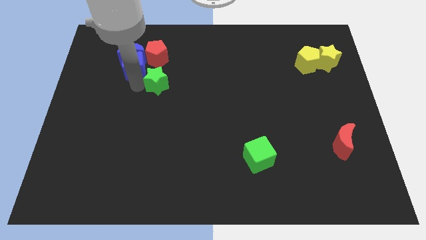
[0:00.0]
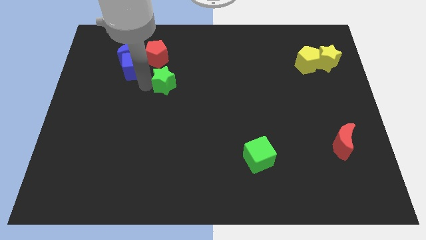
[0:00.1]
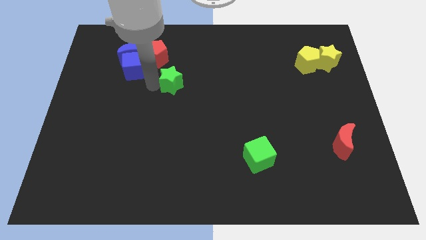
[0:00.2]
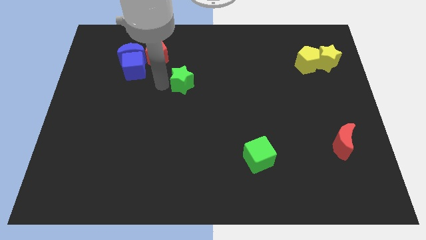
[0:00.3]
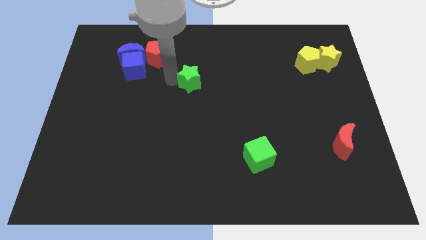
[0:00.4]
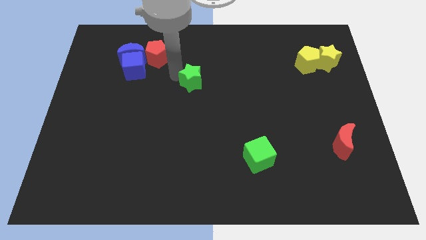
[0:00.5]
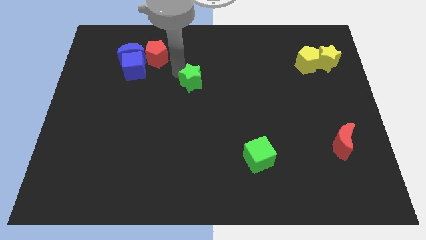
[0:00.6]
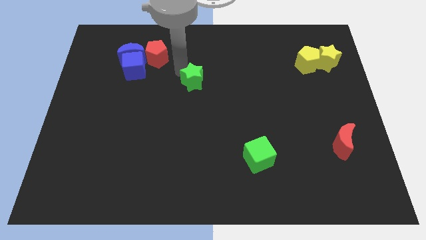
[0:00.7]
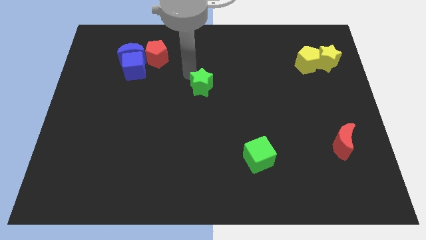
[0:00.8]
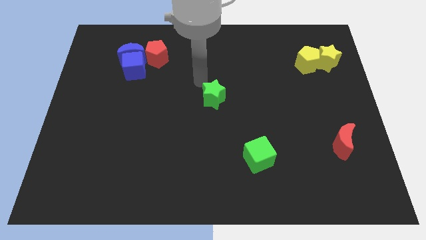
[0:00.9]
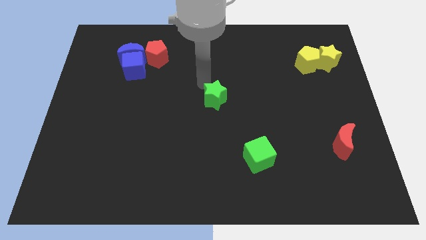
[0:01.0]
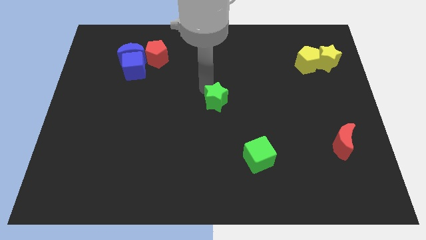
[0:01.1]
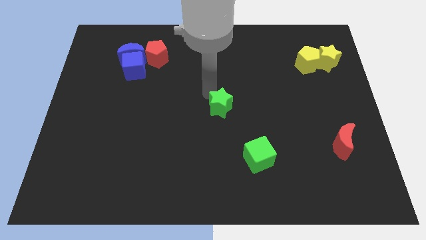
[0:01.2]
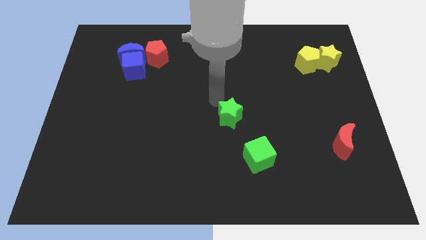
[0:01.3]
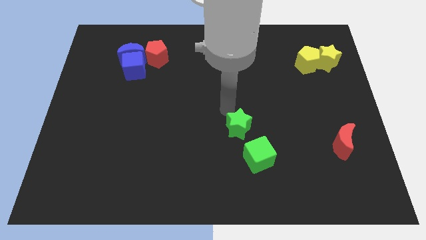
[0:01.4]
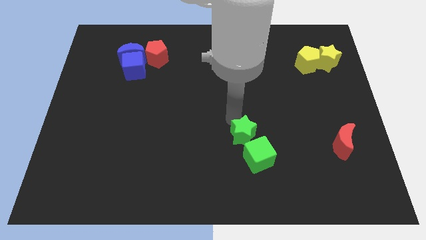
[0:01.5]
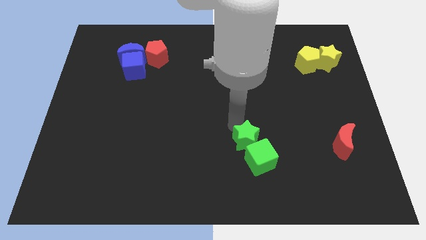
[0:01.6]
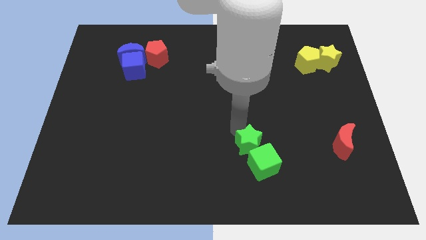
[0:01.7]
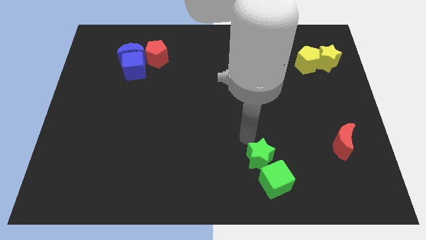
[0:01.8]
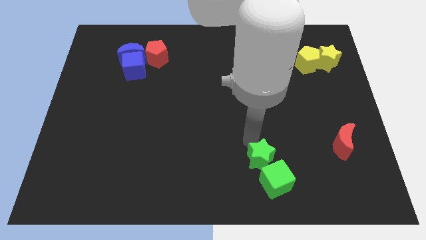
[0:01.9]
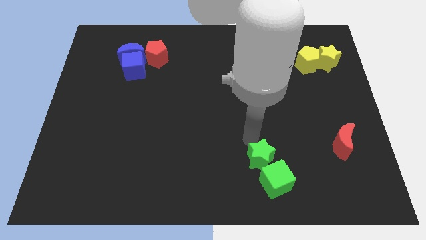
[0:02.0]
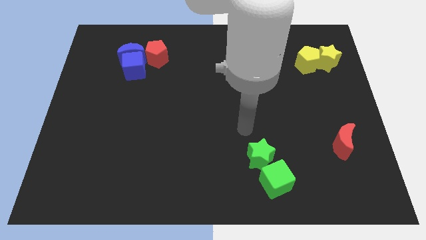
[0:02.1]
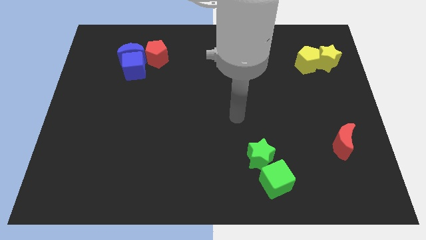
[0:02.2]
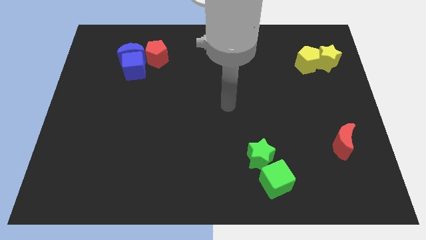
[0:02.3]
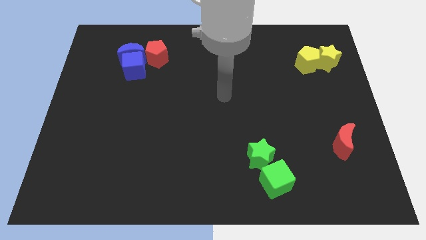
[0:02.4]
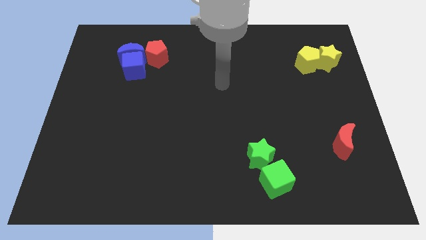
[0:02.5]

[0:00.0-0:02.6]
move the green star into the green cube

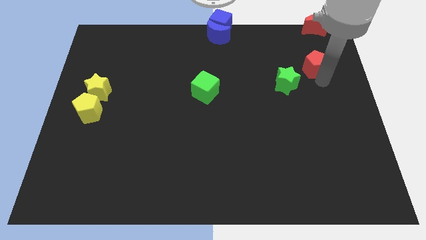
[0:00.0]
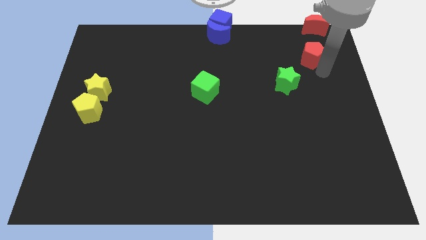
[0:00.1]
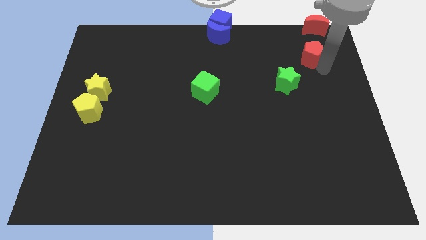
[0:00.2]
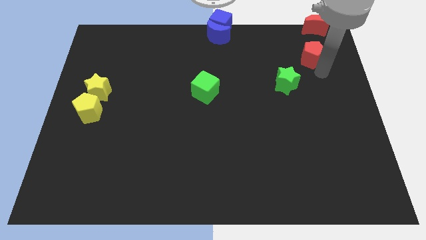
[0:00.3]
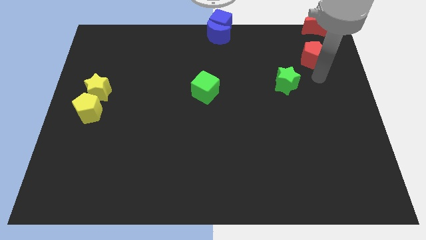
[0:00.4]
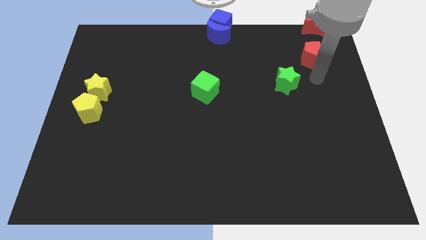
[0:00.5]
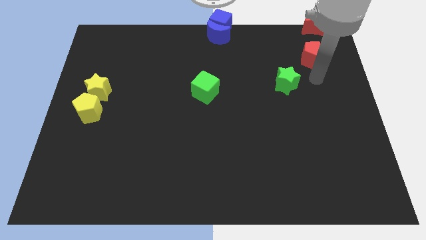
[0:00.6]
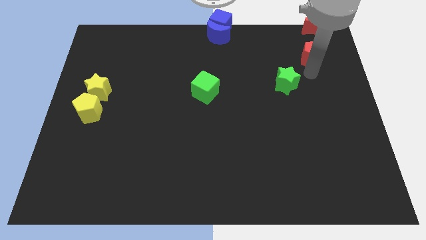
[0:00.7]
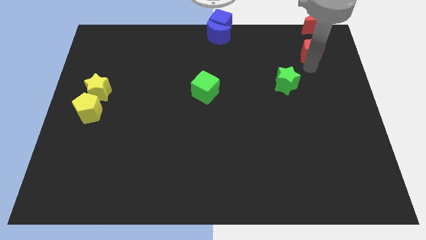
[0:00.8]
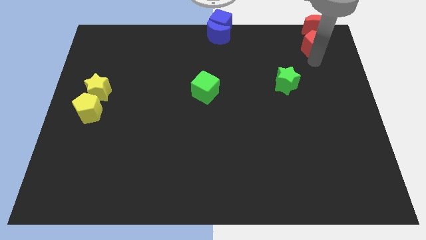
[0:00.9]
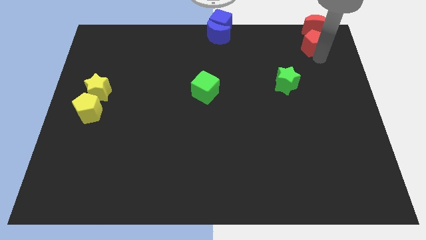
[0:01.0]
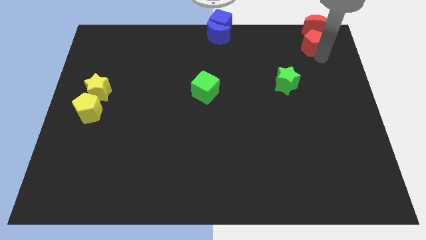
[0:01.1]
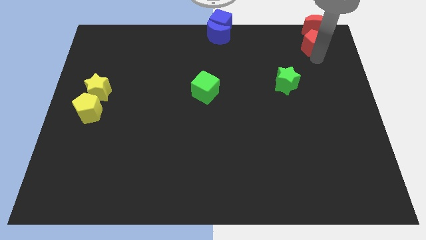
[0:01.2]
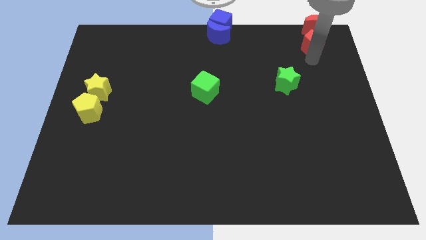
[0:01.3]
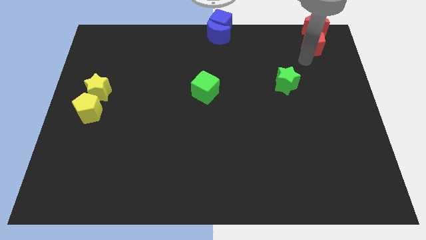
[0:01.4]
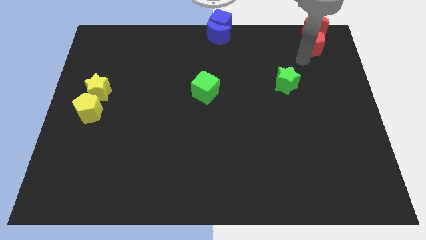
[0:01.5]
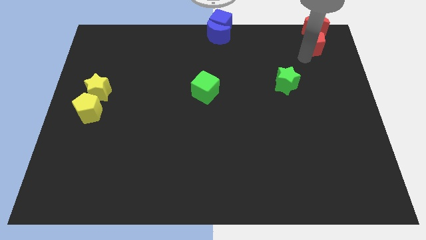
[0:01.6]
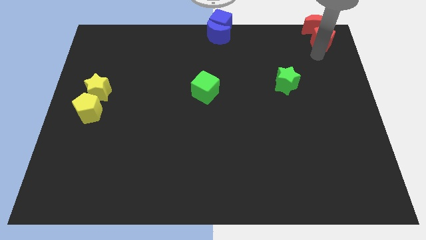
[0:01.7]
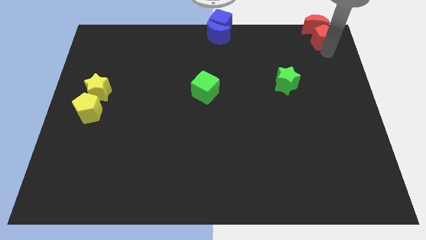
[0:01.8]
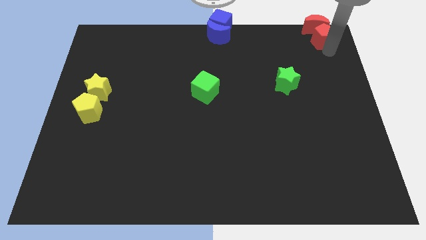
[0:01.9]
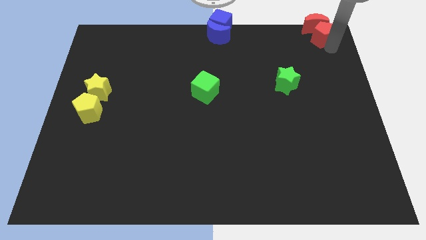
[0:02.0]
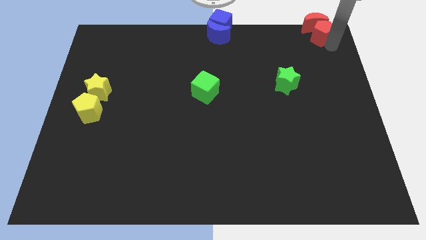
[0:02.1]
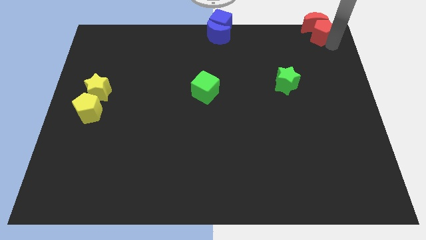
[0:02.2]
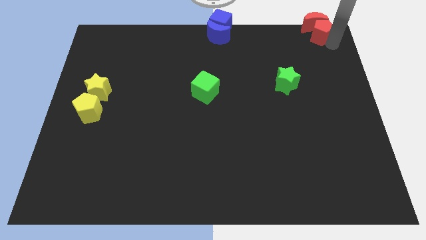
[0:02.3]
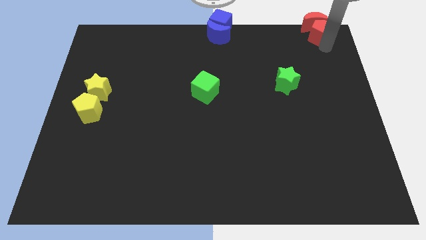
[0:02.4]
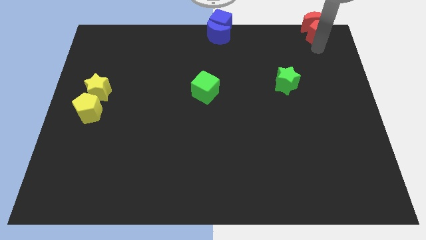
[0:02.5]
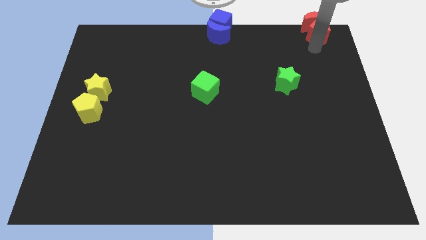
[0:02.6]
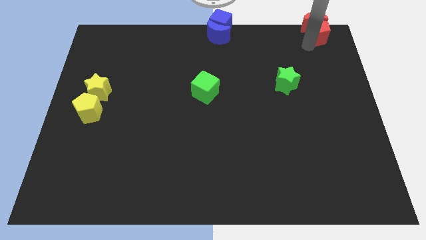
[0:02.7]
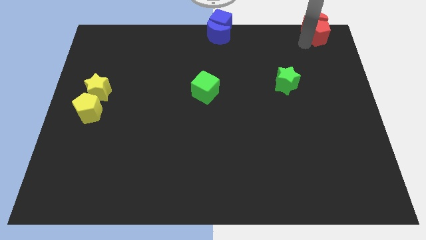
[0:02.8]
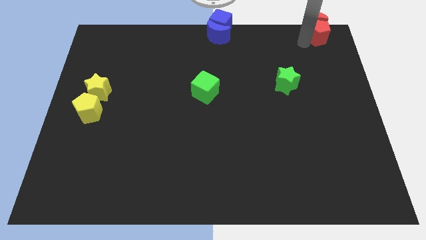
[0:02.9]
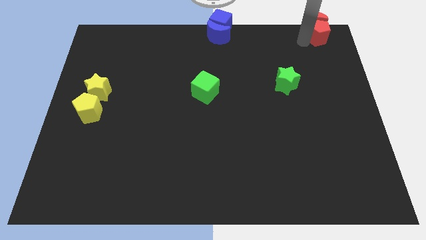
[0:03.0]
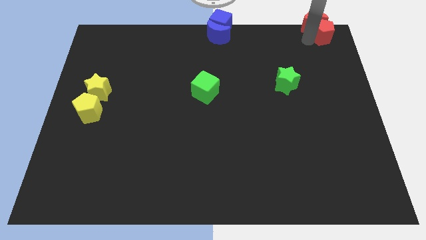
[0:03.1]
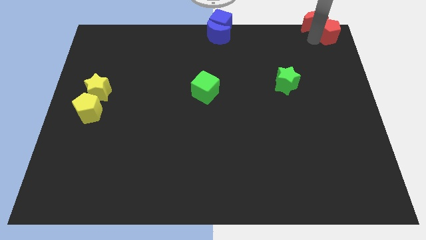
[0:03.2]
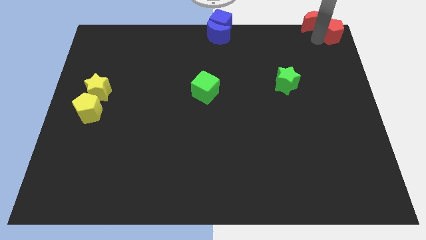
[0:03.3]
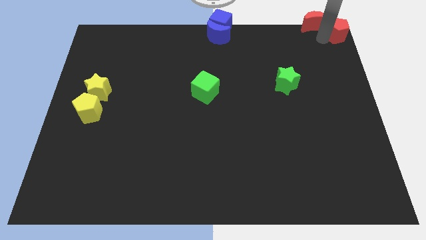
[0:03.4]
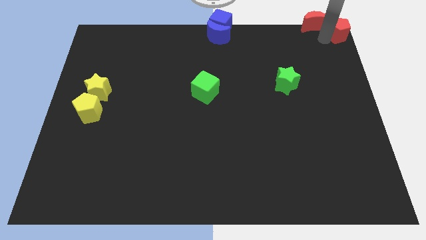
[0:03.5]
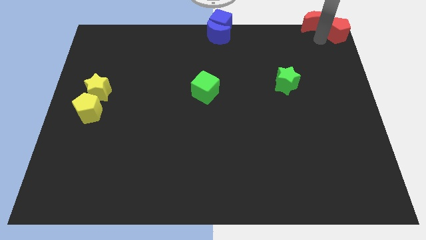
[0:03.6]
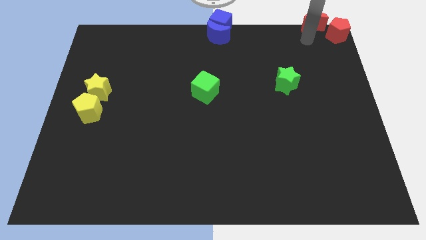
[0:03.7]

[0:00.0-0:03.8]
put the red pentagon at the top right corner

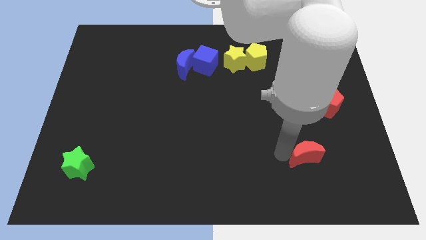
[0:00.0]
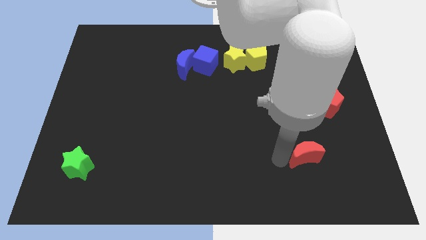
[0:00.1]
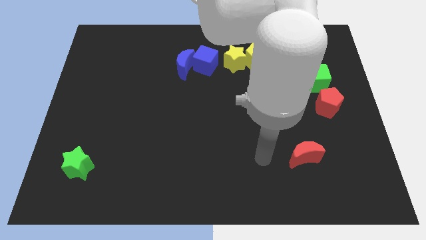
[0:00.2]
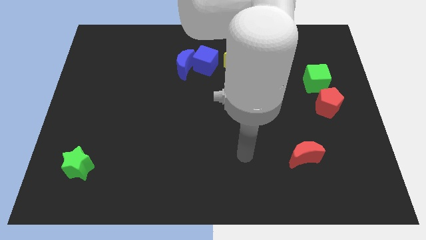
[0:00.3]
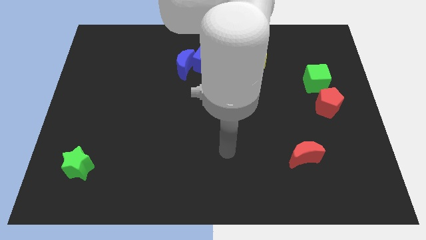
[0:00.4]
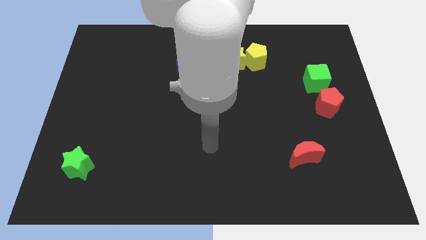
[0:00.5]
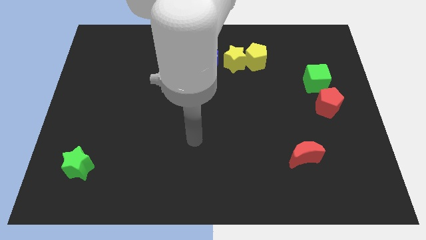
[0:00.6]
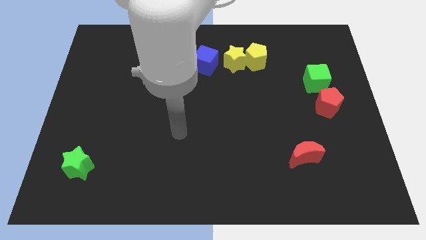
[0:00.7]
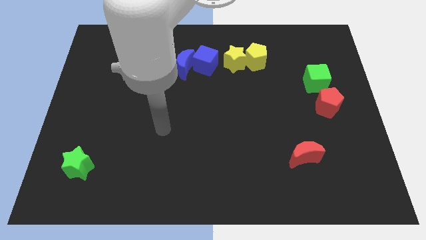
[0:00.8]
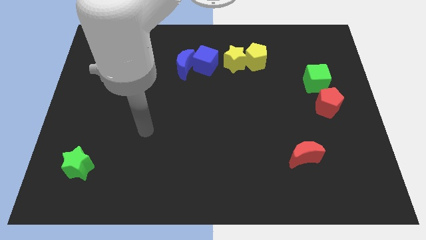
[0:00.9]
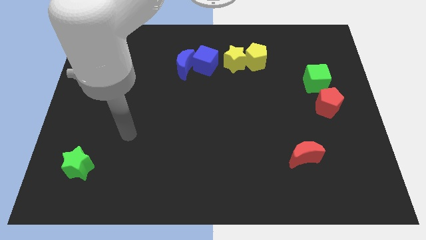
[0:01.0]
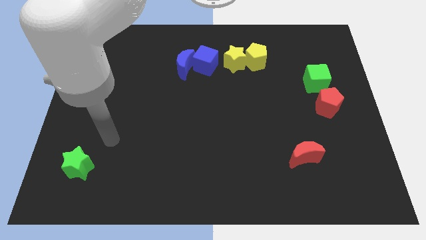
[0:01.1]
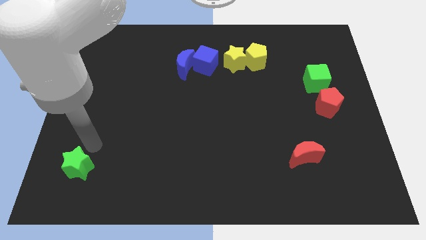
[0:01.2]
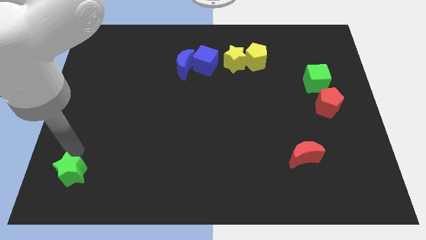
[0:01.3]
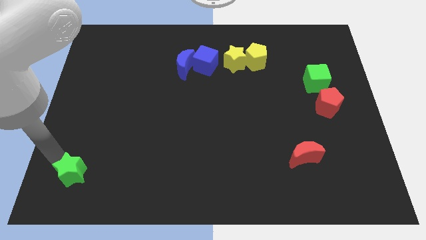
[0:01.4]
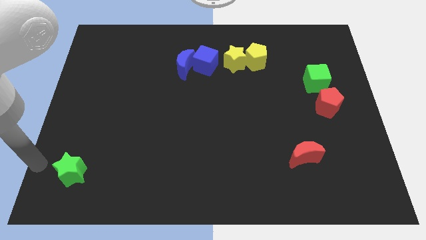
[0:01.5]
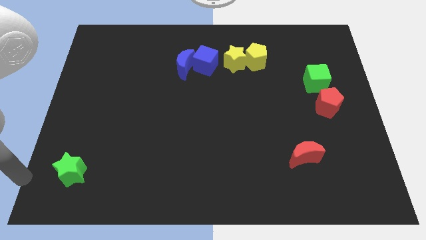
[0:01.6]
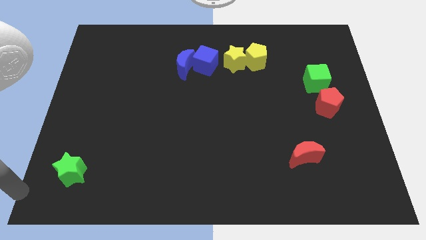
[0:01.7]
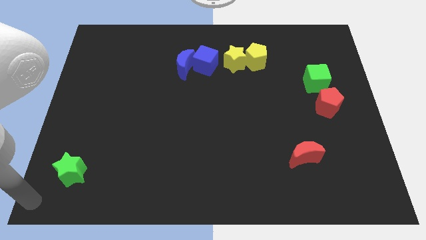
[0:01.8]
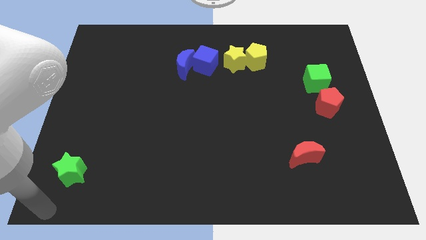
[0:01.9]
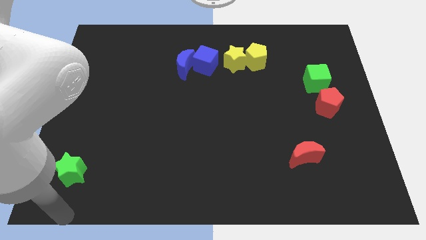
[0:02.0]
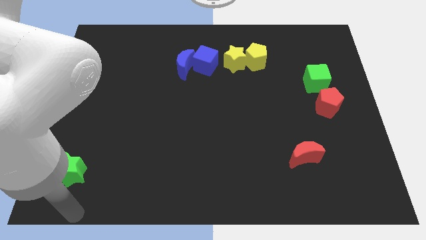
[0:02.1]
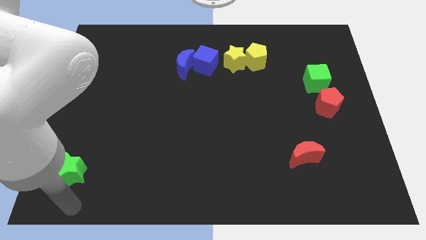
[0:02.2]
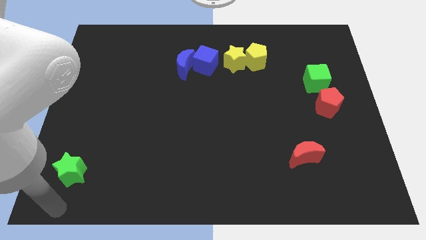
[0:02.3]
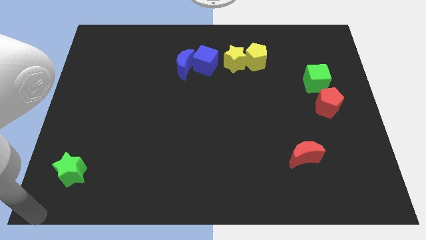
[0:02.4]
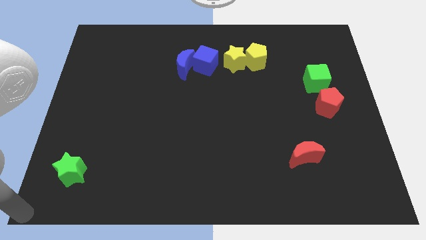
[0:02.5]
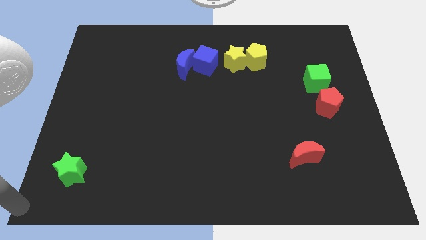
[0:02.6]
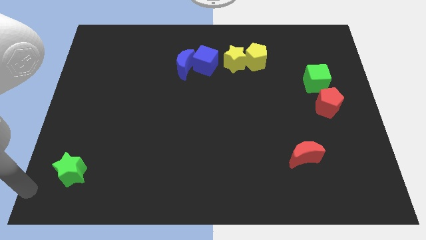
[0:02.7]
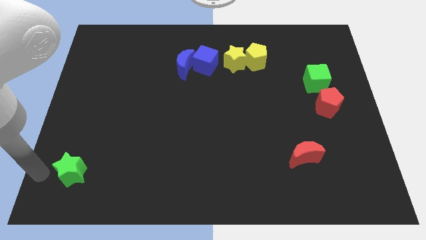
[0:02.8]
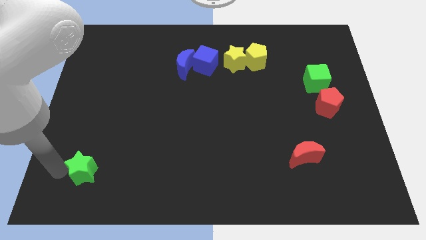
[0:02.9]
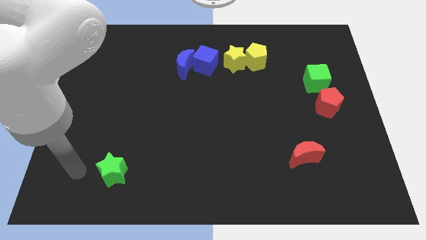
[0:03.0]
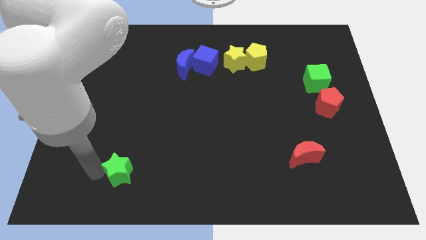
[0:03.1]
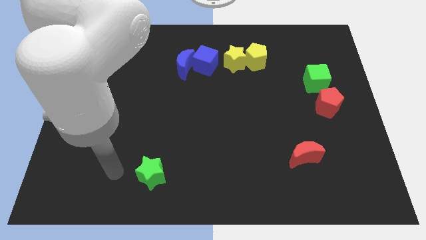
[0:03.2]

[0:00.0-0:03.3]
slightly push the green star to the right
